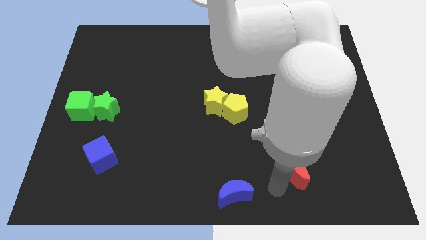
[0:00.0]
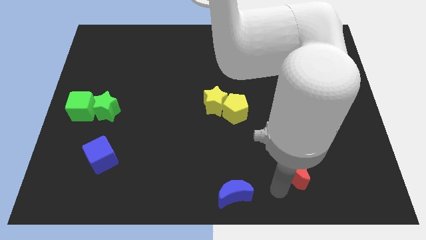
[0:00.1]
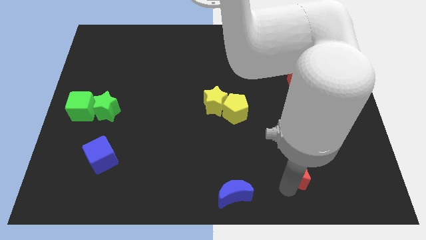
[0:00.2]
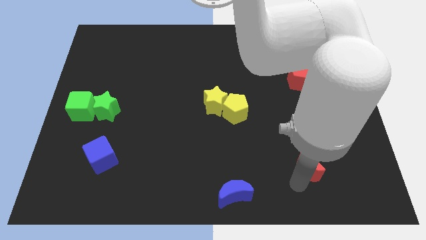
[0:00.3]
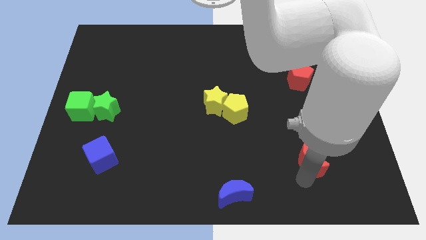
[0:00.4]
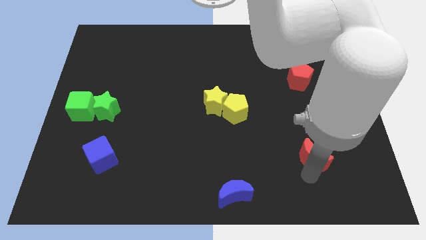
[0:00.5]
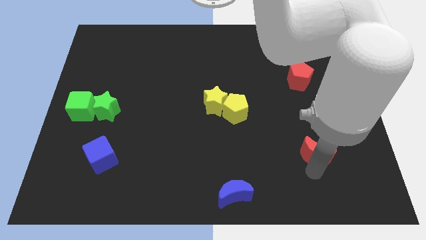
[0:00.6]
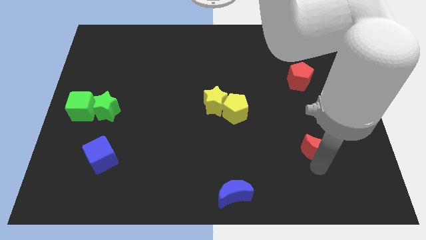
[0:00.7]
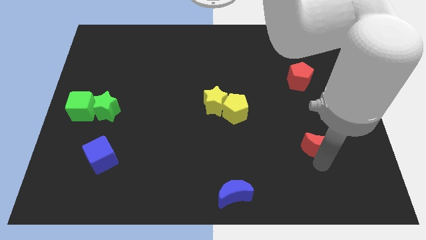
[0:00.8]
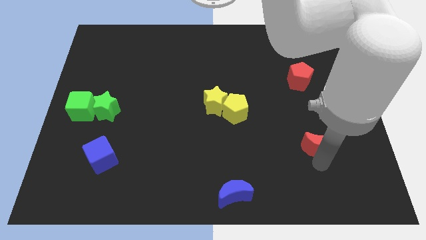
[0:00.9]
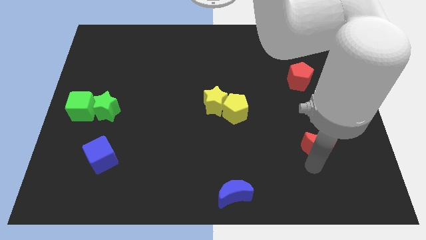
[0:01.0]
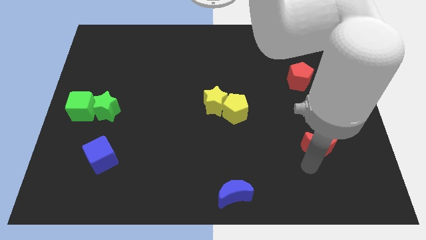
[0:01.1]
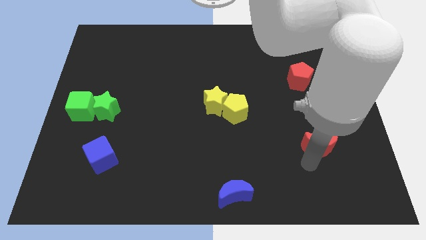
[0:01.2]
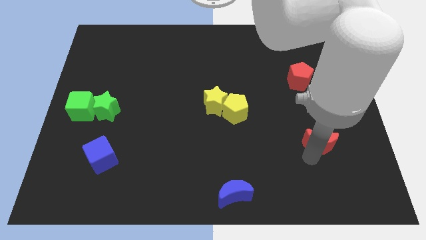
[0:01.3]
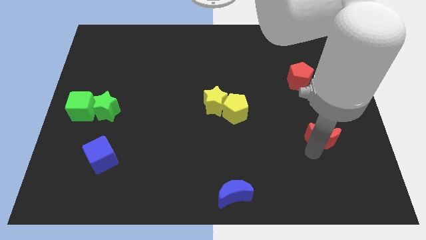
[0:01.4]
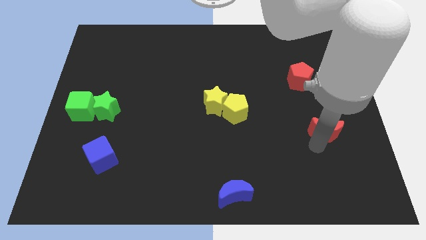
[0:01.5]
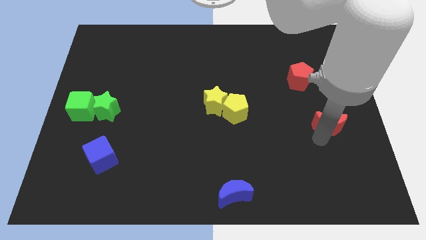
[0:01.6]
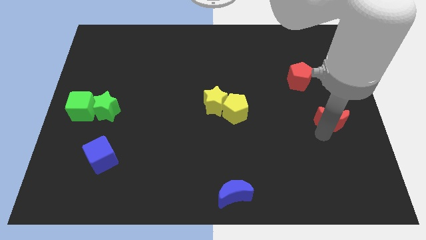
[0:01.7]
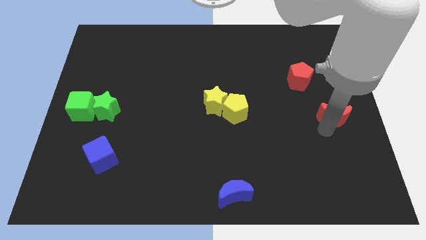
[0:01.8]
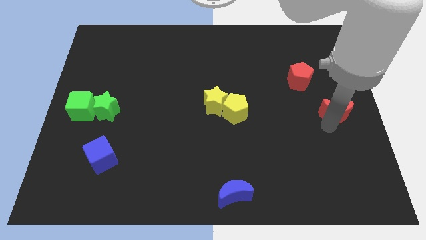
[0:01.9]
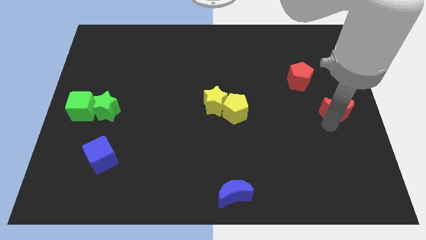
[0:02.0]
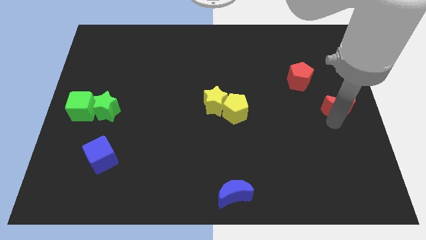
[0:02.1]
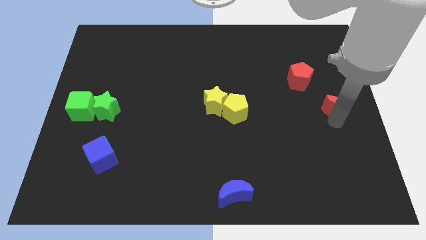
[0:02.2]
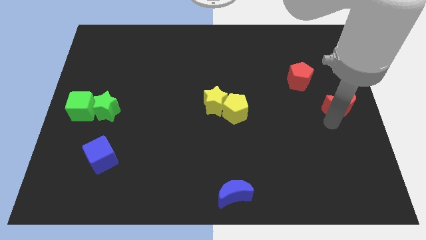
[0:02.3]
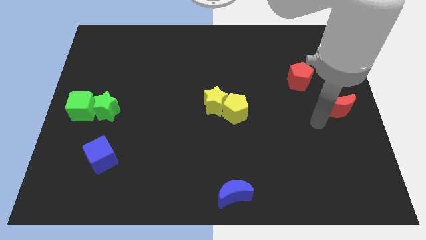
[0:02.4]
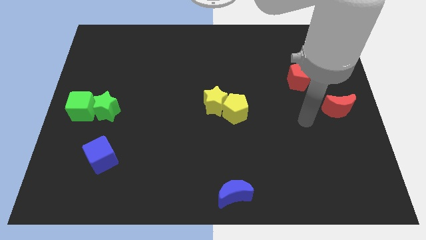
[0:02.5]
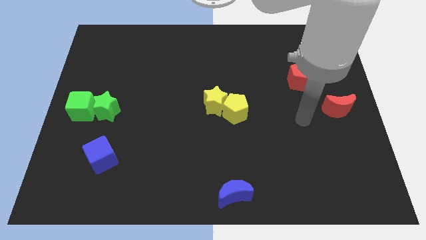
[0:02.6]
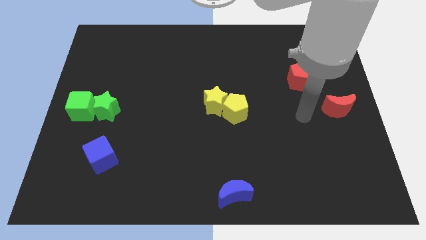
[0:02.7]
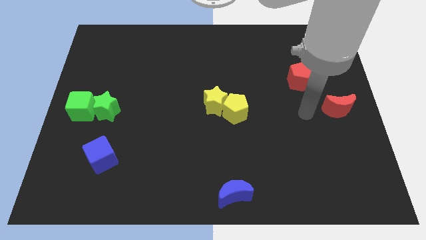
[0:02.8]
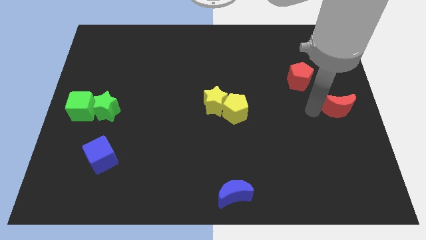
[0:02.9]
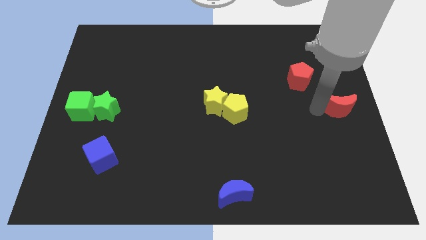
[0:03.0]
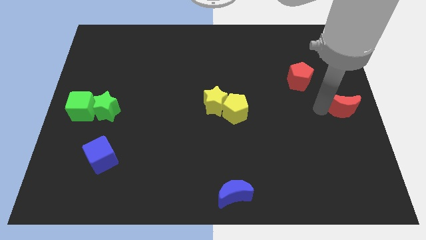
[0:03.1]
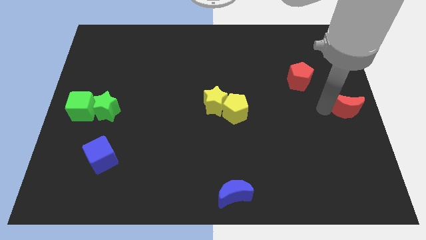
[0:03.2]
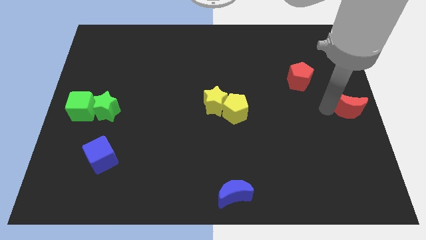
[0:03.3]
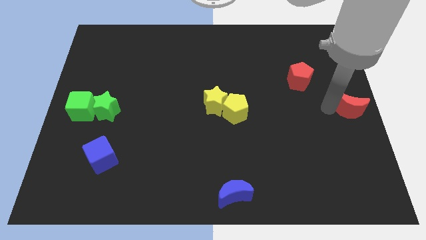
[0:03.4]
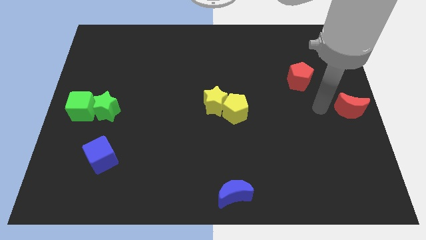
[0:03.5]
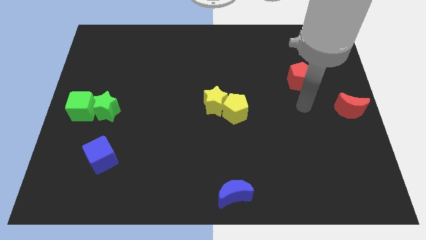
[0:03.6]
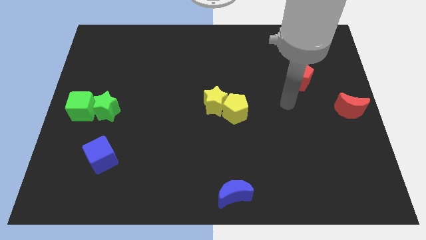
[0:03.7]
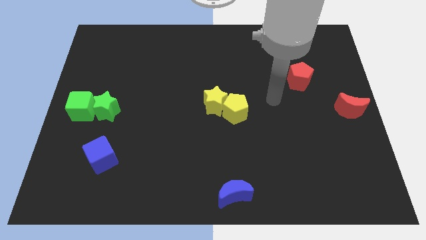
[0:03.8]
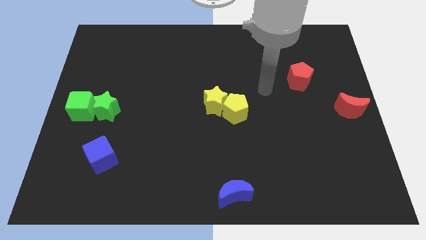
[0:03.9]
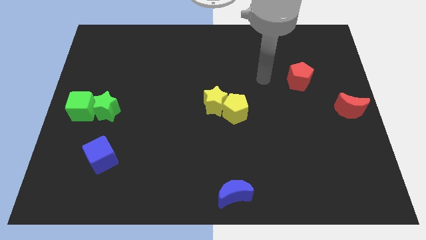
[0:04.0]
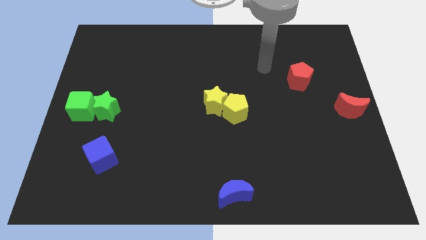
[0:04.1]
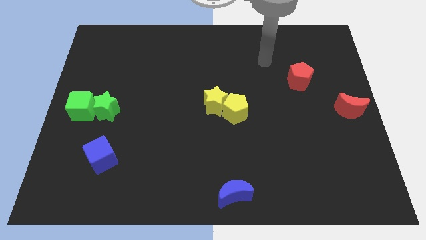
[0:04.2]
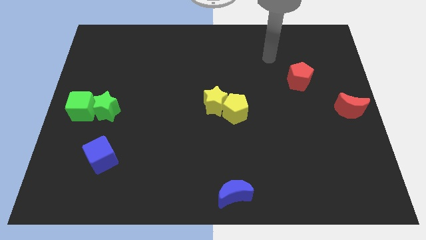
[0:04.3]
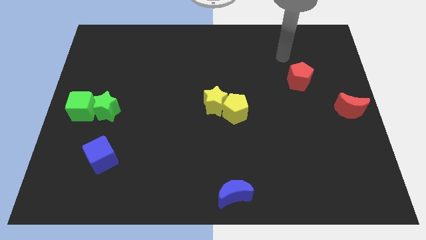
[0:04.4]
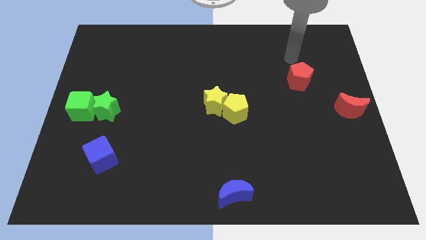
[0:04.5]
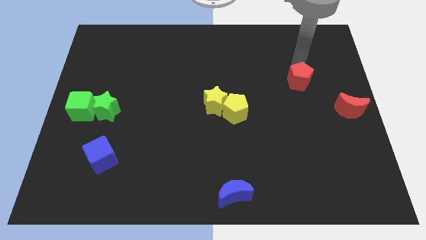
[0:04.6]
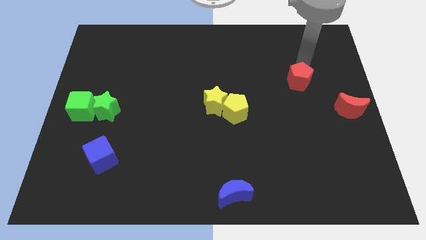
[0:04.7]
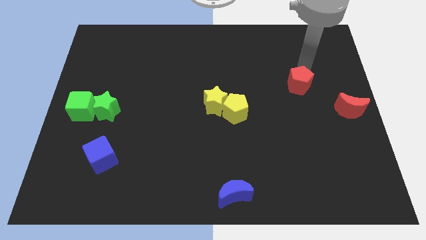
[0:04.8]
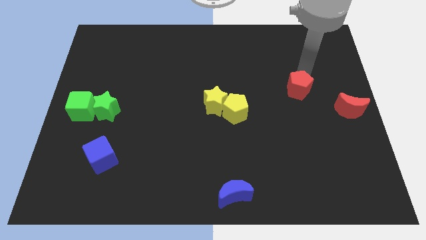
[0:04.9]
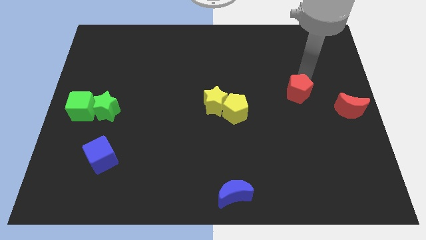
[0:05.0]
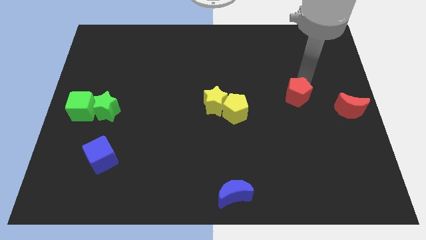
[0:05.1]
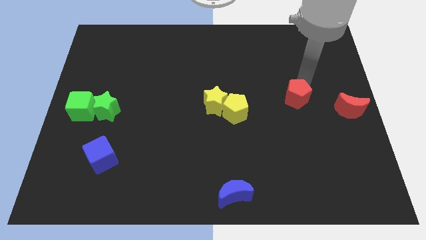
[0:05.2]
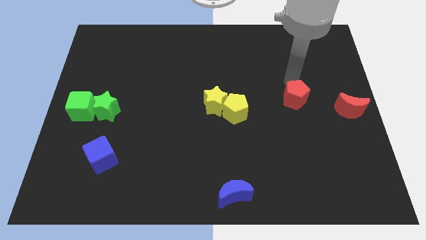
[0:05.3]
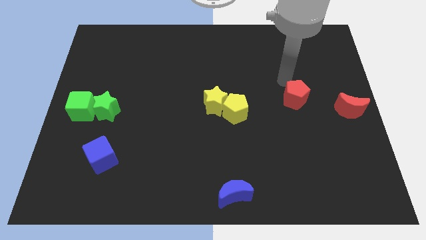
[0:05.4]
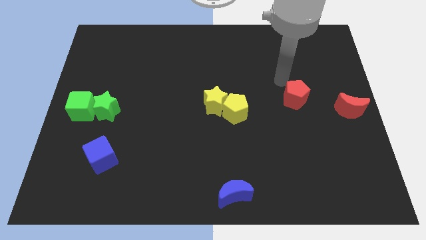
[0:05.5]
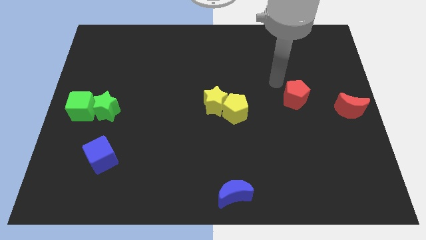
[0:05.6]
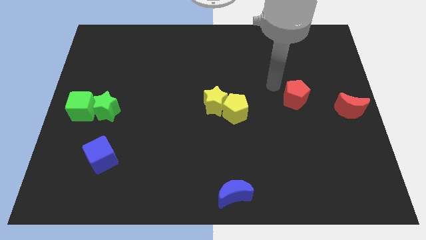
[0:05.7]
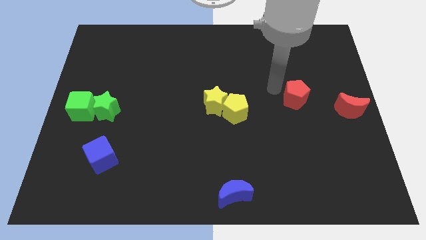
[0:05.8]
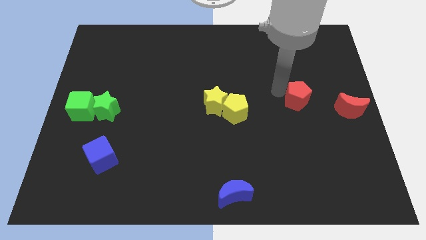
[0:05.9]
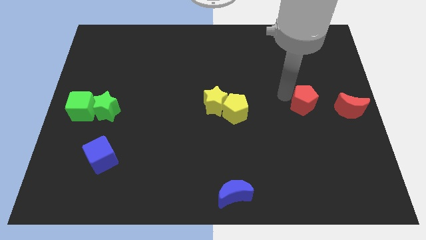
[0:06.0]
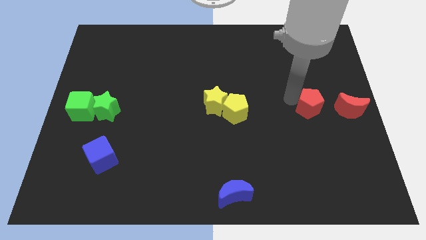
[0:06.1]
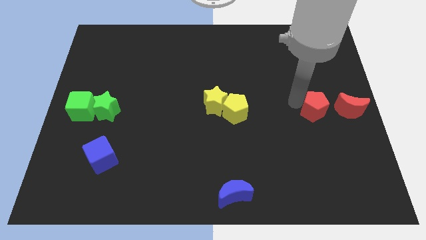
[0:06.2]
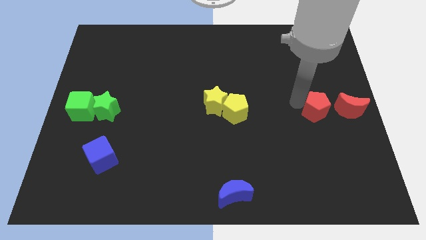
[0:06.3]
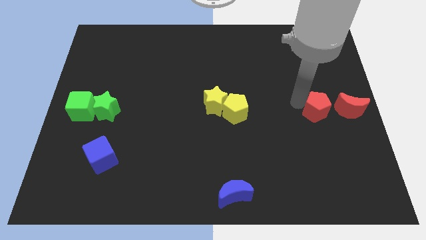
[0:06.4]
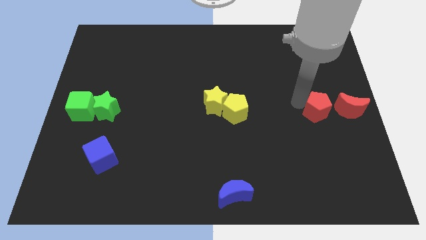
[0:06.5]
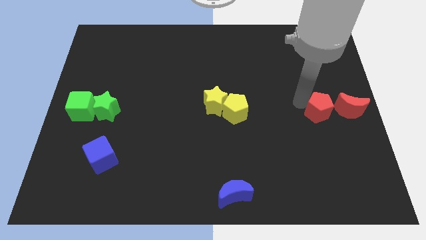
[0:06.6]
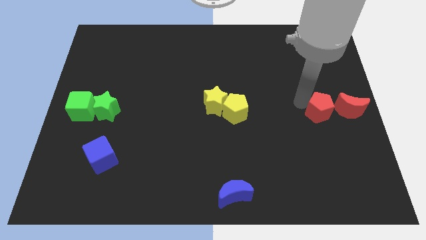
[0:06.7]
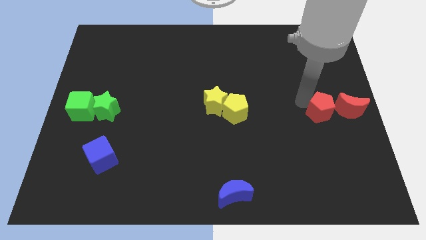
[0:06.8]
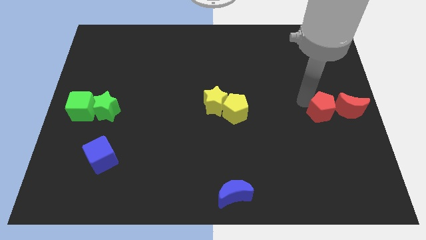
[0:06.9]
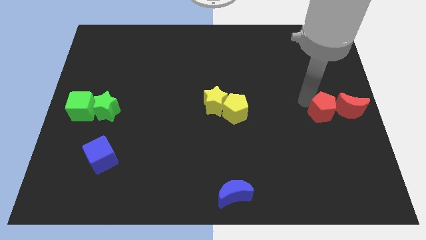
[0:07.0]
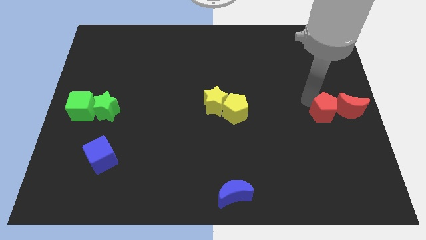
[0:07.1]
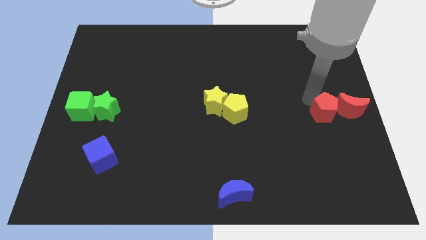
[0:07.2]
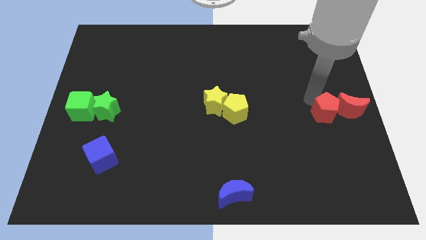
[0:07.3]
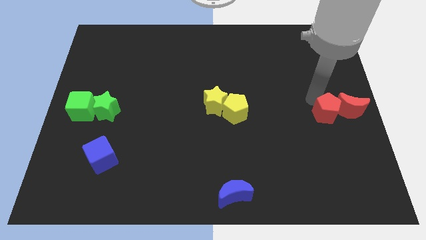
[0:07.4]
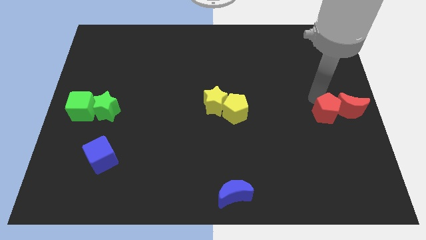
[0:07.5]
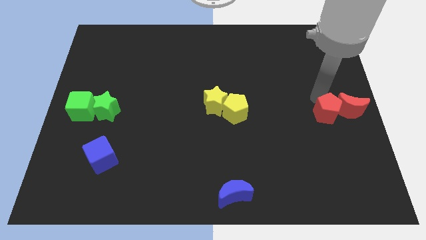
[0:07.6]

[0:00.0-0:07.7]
group up the red blocks at the center right of the board

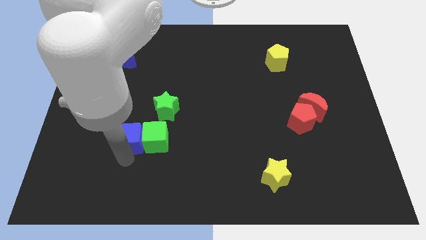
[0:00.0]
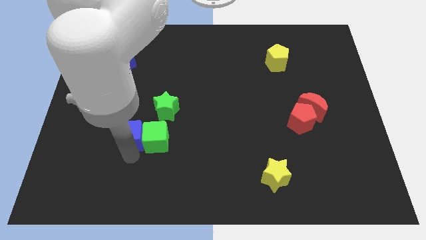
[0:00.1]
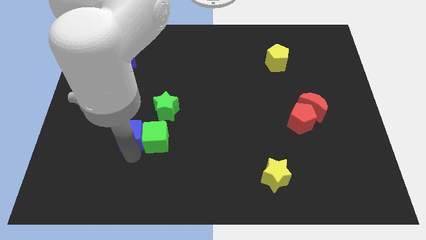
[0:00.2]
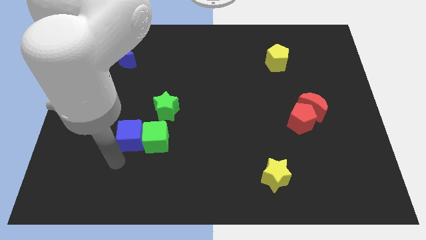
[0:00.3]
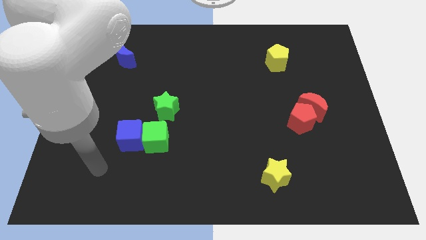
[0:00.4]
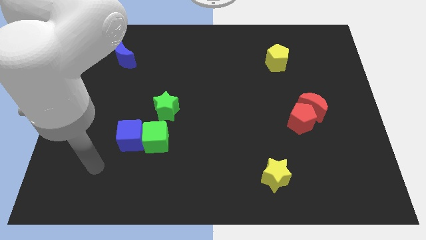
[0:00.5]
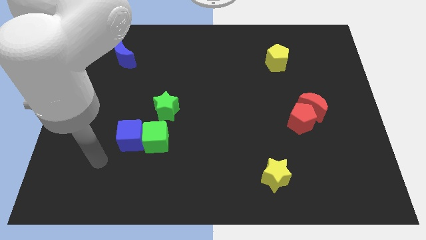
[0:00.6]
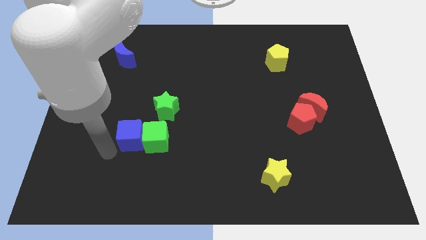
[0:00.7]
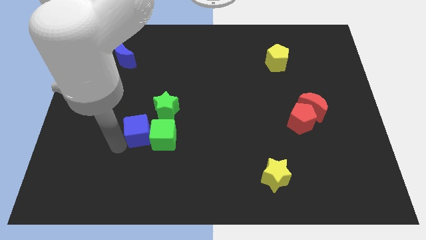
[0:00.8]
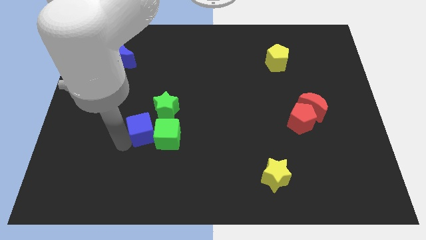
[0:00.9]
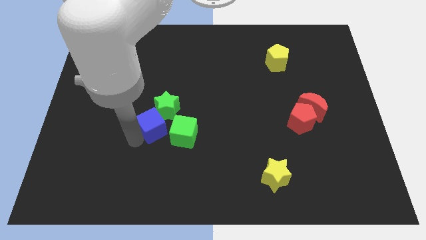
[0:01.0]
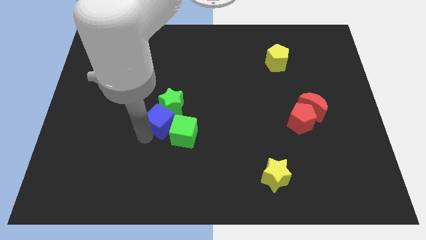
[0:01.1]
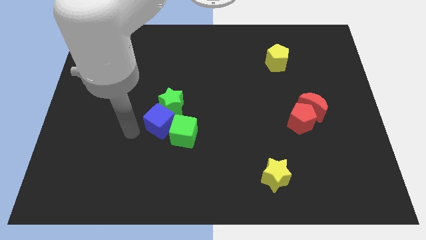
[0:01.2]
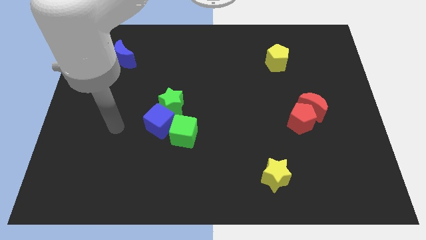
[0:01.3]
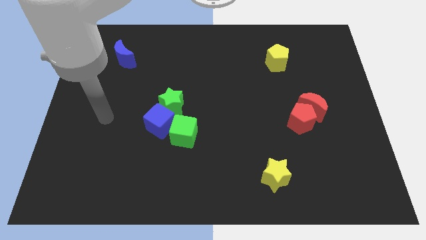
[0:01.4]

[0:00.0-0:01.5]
push both the cubes into the green star

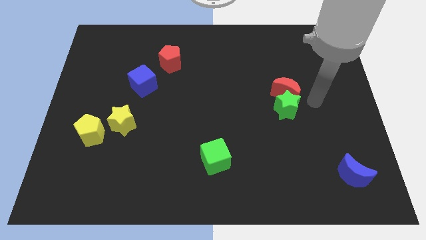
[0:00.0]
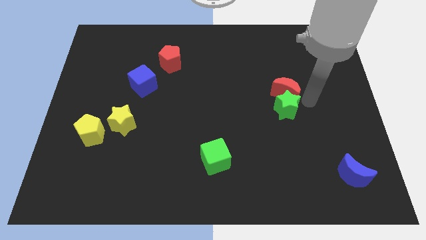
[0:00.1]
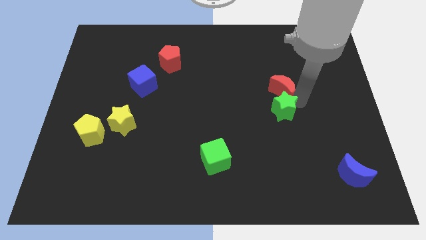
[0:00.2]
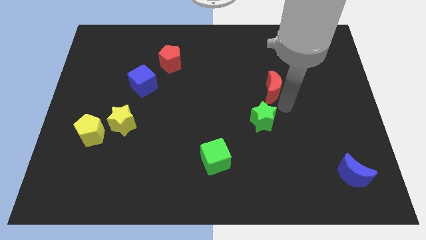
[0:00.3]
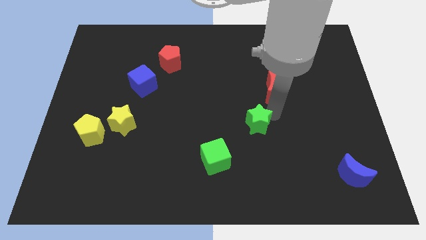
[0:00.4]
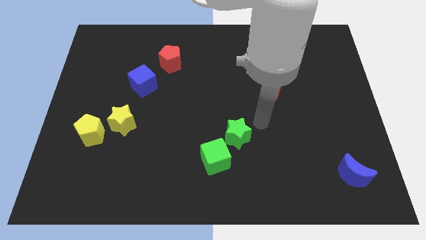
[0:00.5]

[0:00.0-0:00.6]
separate the green star and red moon
